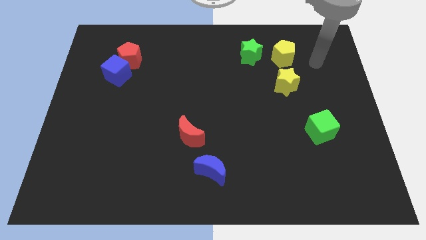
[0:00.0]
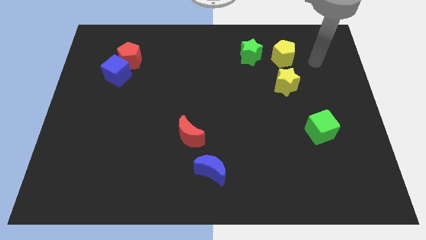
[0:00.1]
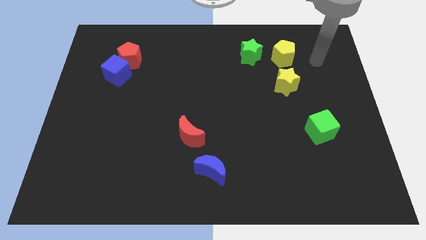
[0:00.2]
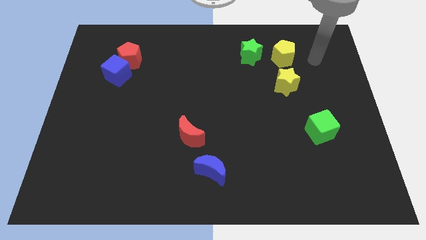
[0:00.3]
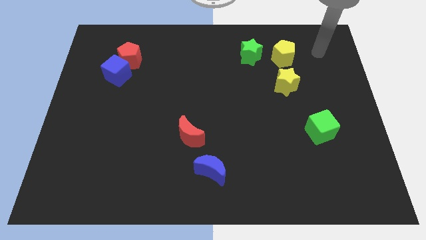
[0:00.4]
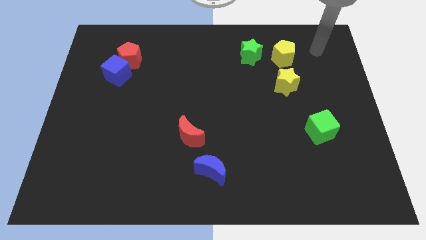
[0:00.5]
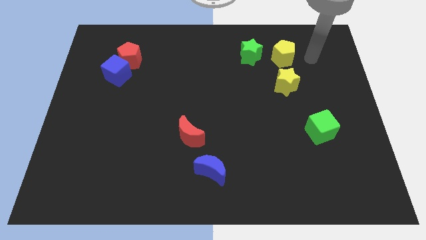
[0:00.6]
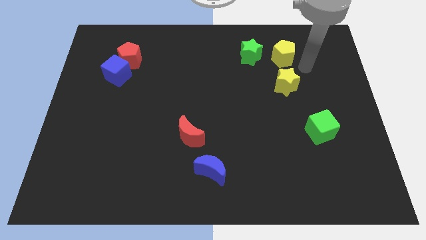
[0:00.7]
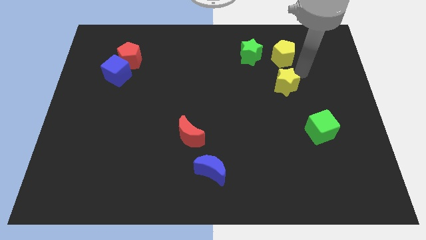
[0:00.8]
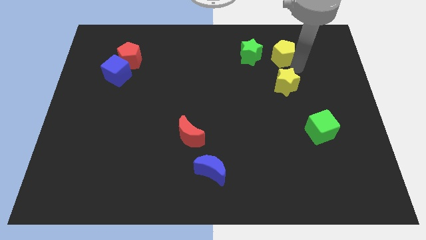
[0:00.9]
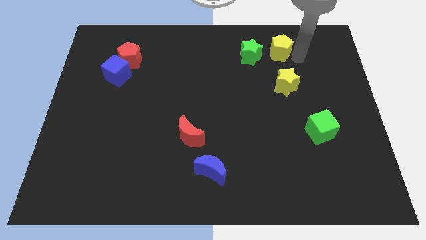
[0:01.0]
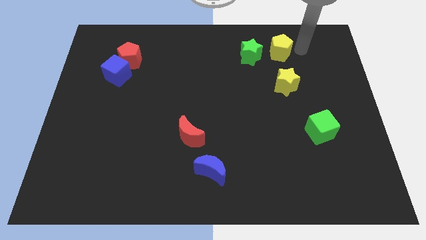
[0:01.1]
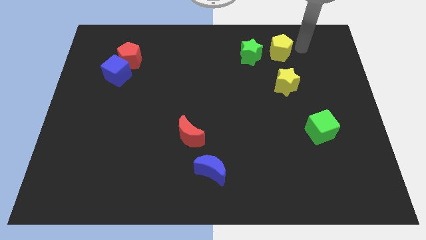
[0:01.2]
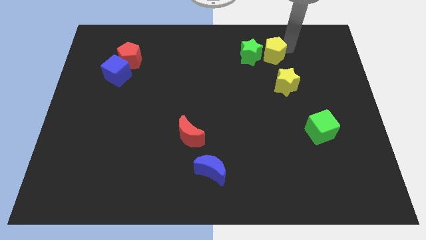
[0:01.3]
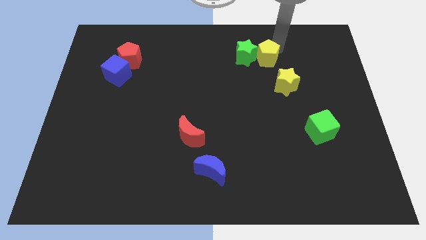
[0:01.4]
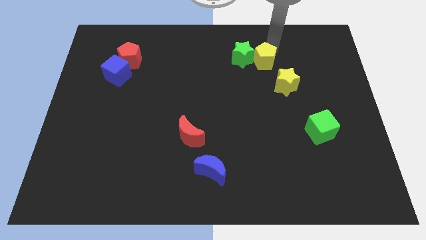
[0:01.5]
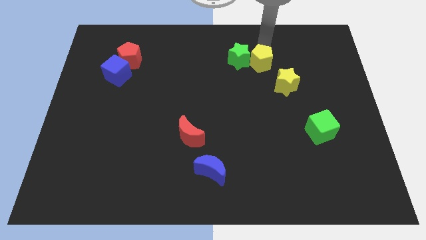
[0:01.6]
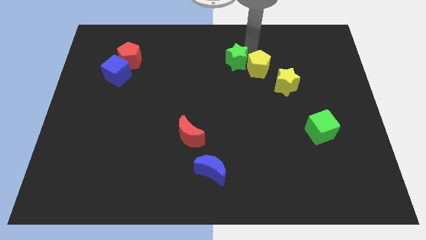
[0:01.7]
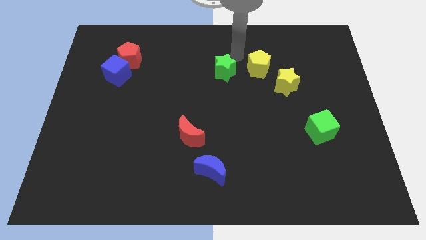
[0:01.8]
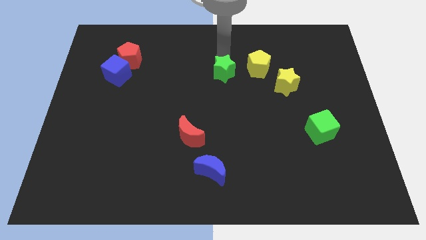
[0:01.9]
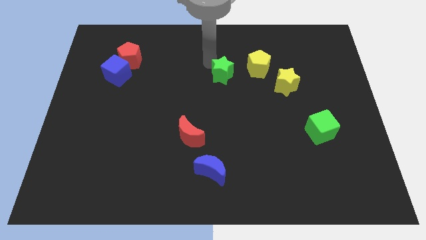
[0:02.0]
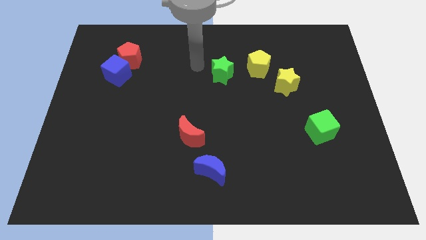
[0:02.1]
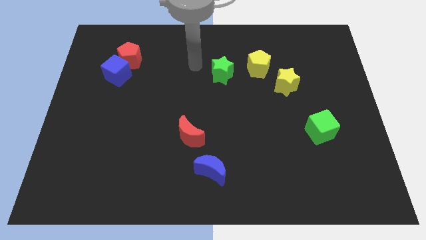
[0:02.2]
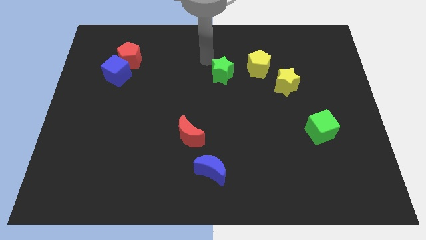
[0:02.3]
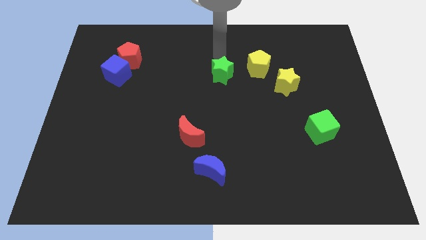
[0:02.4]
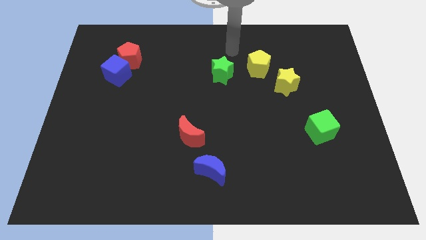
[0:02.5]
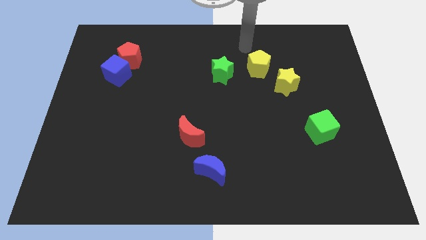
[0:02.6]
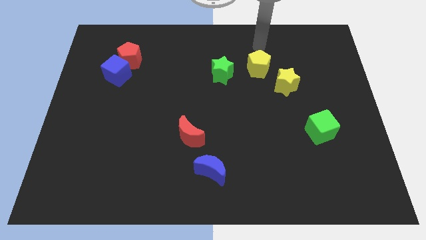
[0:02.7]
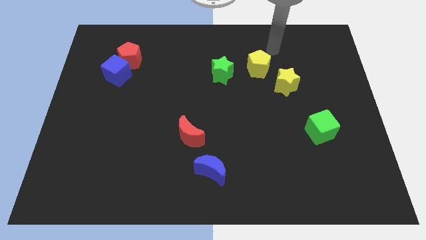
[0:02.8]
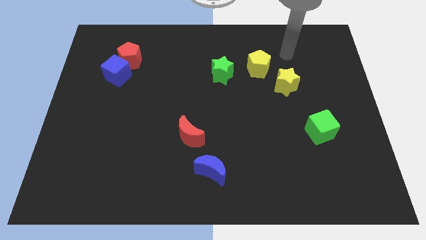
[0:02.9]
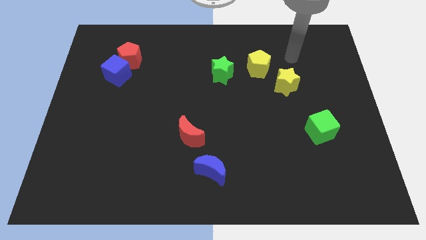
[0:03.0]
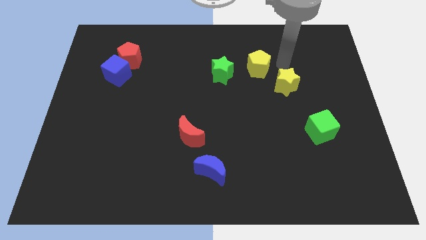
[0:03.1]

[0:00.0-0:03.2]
push the green star towards the left of the yellow pentagon

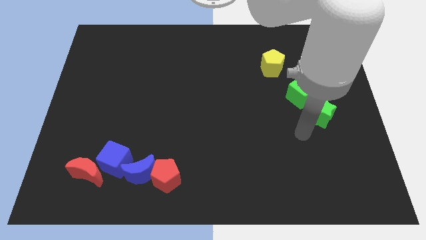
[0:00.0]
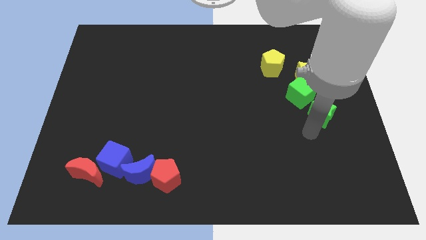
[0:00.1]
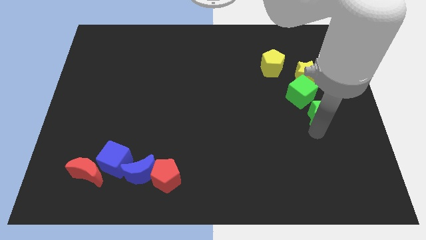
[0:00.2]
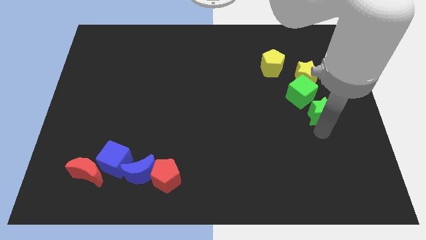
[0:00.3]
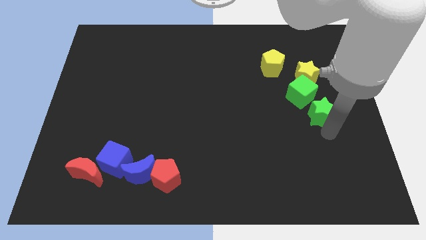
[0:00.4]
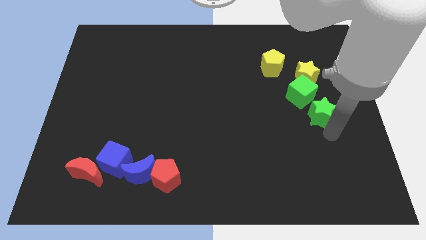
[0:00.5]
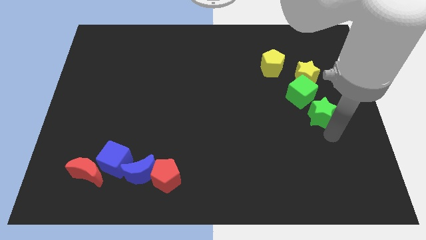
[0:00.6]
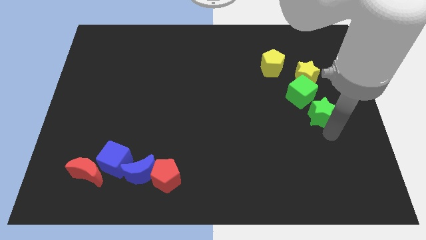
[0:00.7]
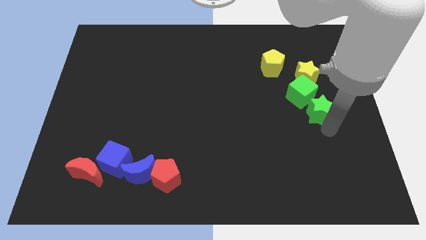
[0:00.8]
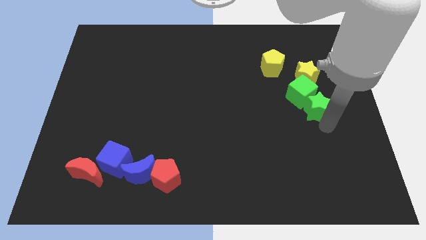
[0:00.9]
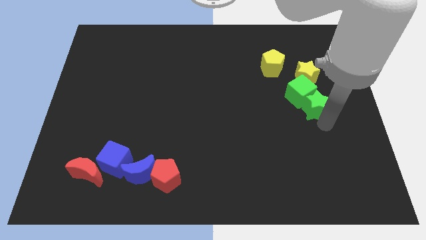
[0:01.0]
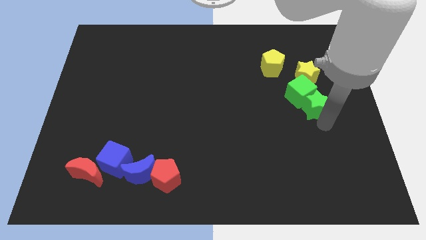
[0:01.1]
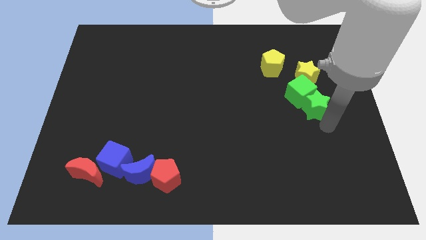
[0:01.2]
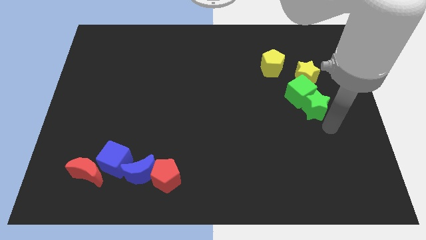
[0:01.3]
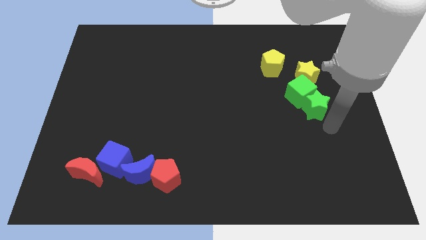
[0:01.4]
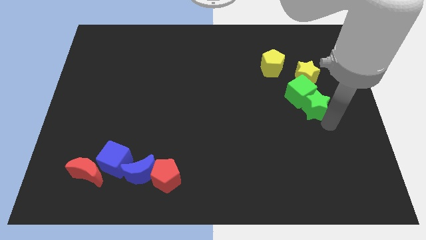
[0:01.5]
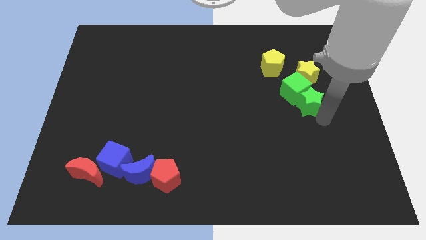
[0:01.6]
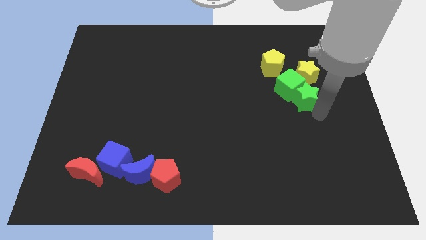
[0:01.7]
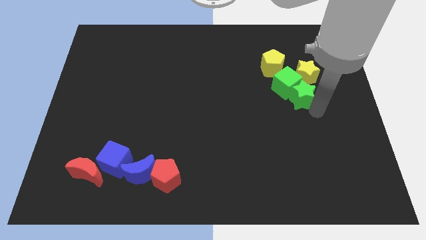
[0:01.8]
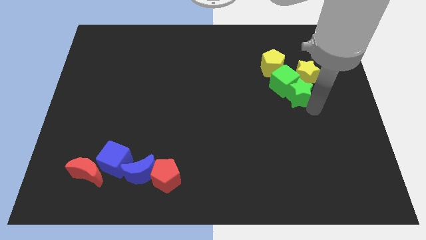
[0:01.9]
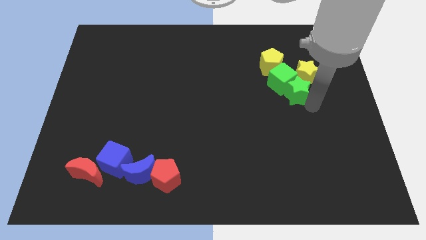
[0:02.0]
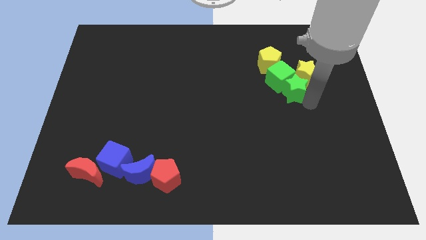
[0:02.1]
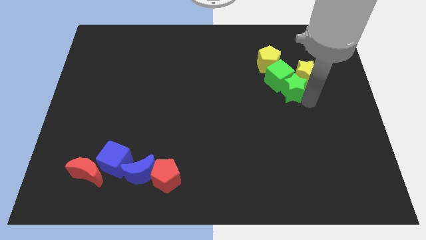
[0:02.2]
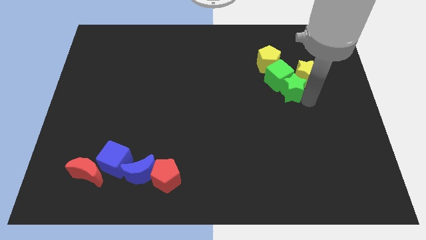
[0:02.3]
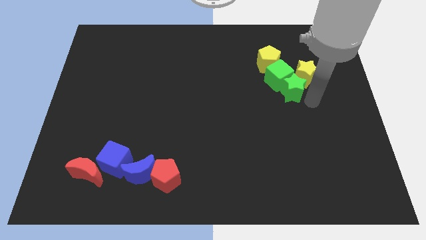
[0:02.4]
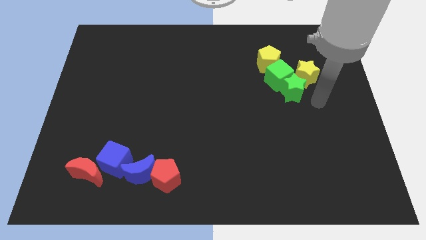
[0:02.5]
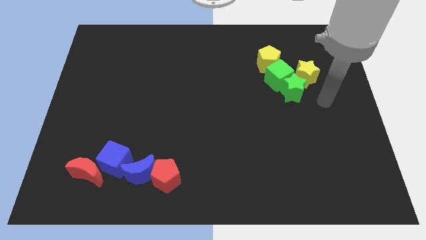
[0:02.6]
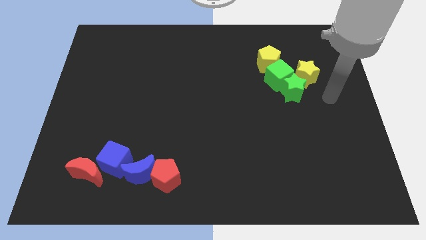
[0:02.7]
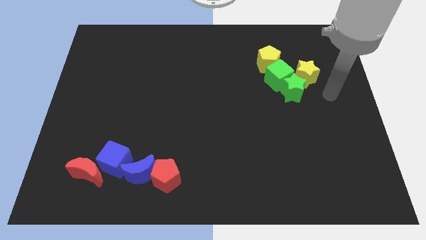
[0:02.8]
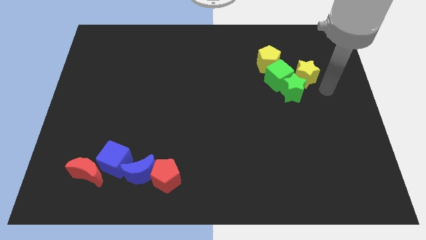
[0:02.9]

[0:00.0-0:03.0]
push the green star into the green cube towards the yellow pentagon

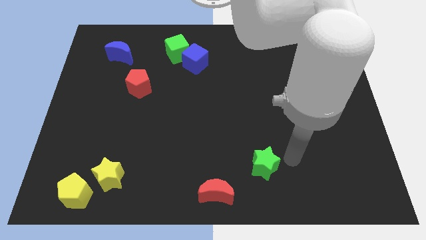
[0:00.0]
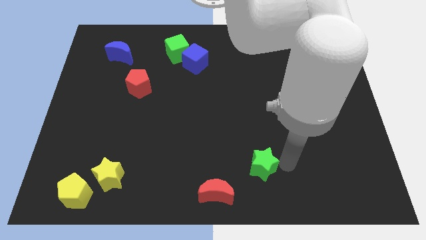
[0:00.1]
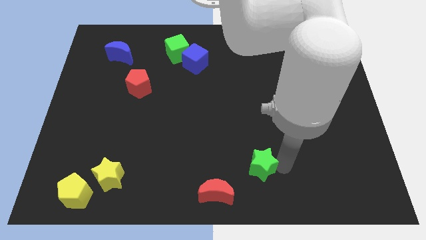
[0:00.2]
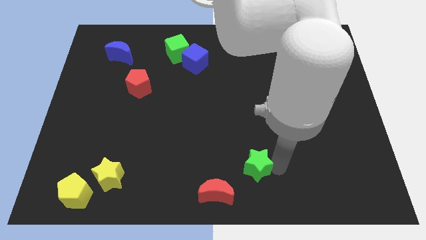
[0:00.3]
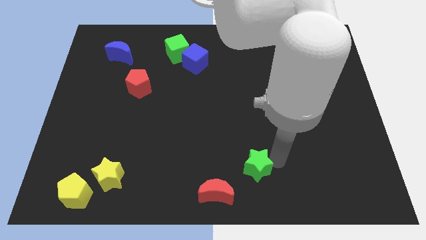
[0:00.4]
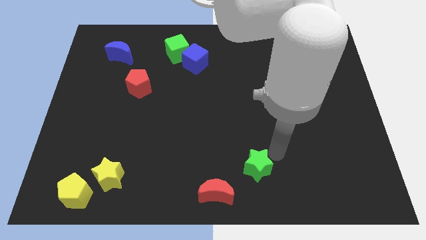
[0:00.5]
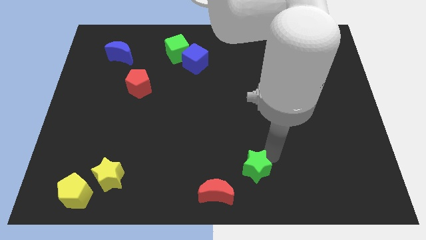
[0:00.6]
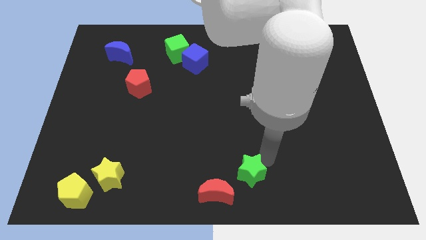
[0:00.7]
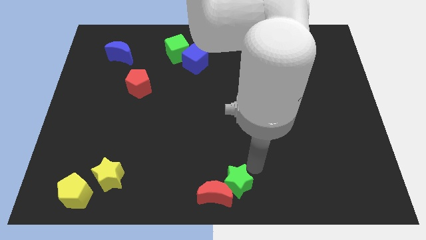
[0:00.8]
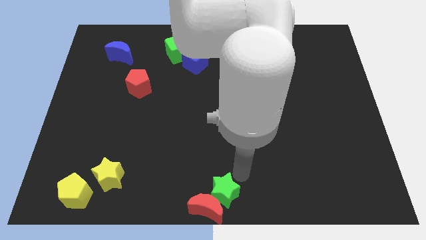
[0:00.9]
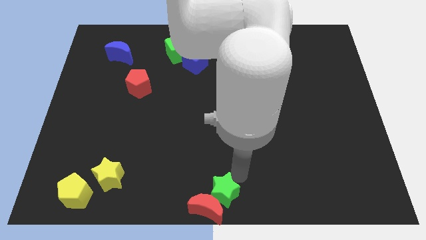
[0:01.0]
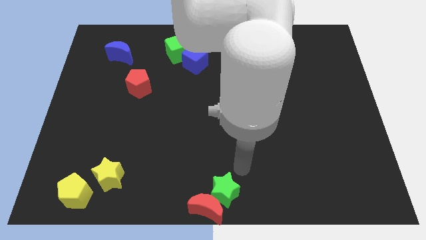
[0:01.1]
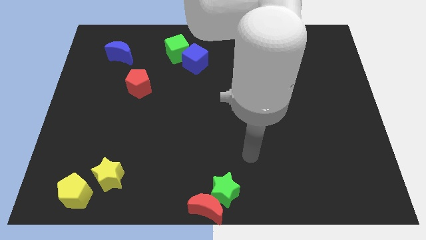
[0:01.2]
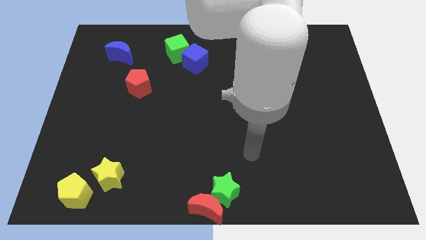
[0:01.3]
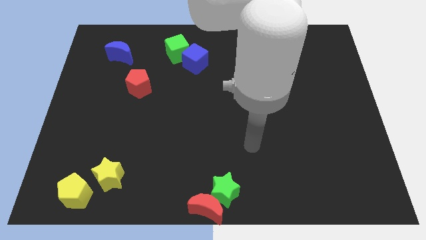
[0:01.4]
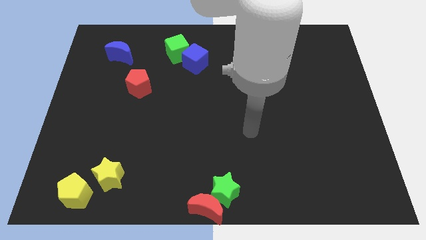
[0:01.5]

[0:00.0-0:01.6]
push the green star into the red moon

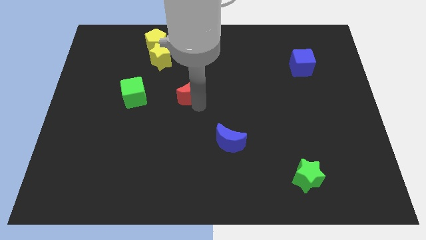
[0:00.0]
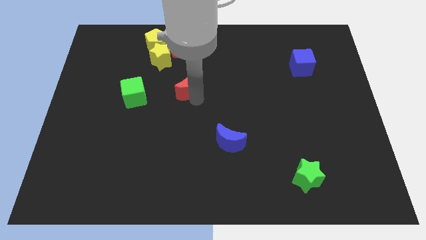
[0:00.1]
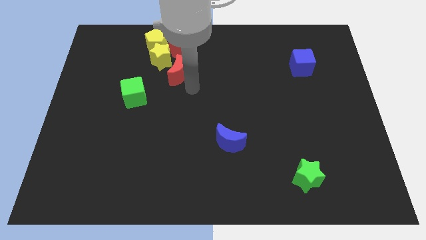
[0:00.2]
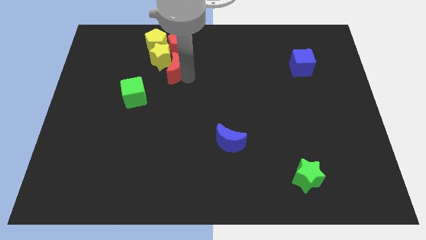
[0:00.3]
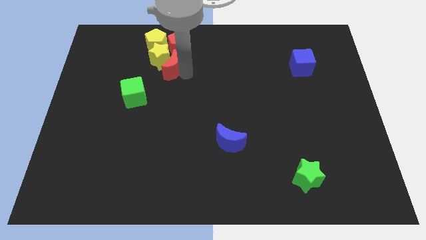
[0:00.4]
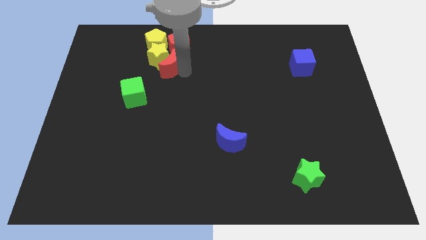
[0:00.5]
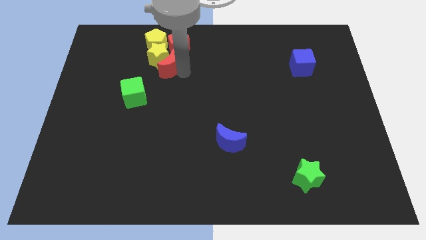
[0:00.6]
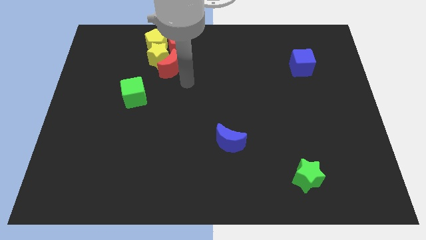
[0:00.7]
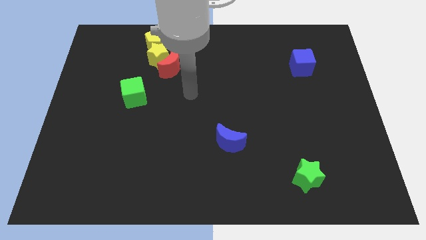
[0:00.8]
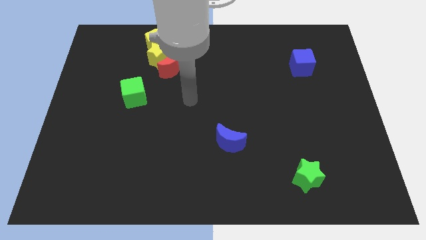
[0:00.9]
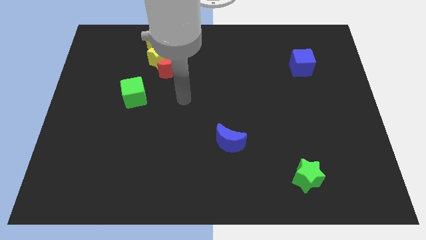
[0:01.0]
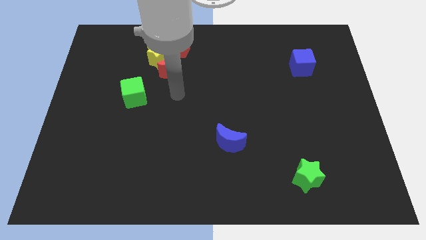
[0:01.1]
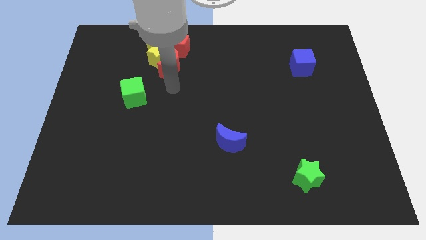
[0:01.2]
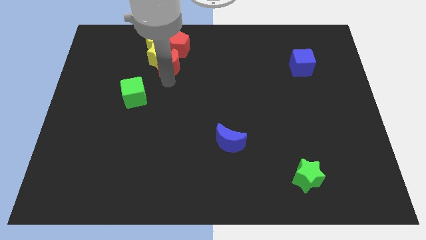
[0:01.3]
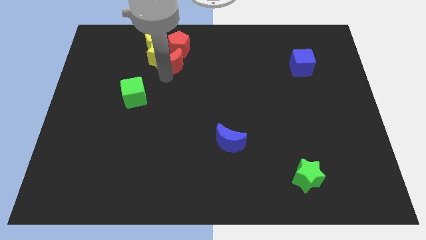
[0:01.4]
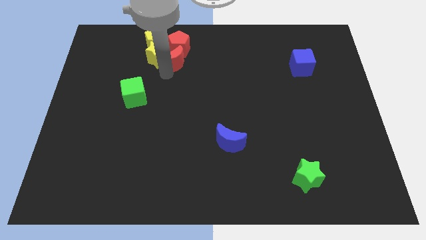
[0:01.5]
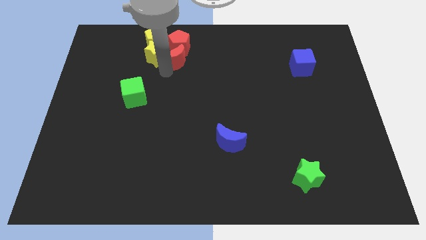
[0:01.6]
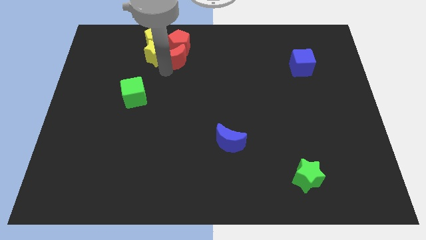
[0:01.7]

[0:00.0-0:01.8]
slide the red crescent into the group of blocks
